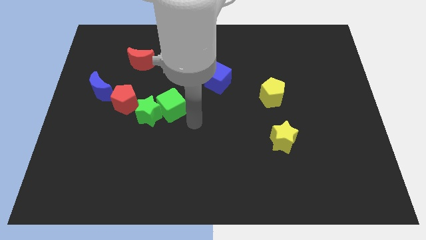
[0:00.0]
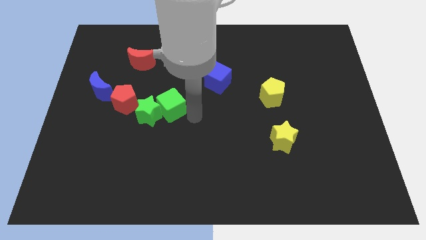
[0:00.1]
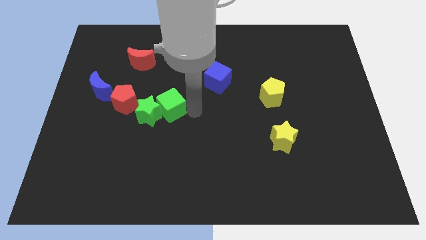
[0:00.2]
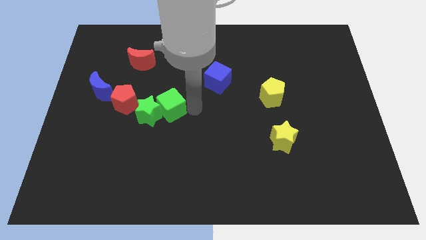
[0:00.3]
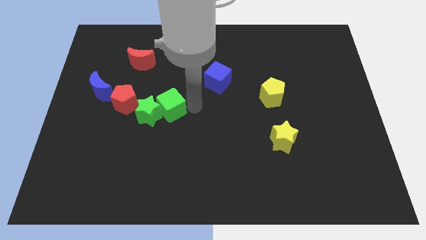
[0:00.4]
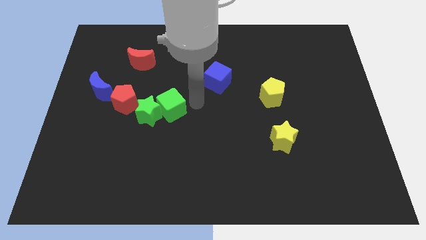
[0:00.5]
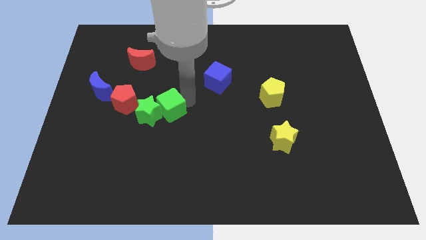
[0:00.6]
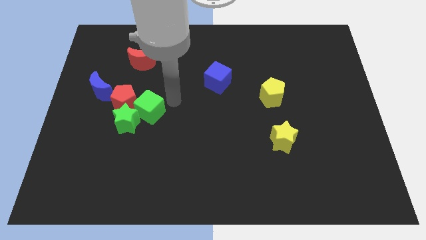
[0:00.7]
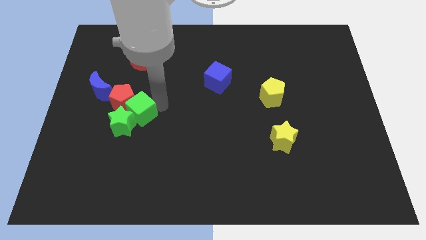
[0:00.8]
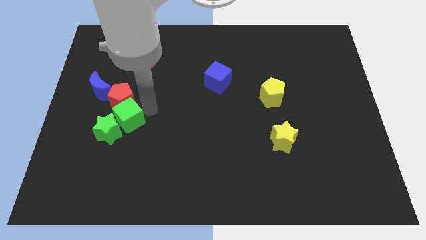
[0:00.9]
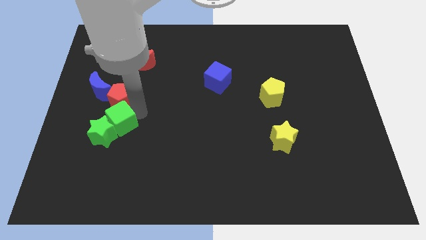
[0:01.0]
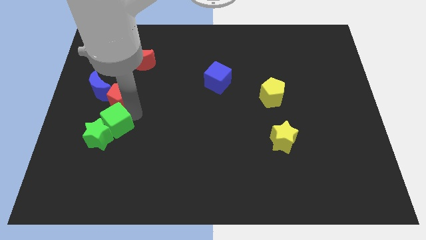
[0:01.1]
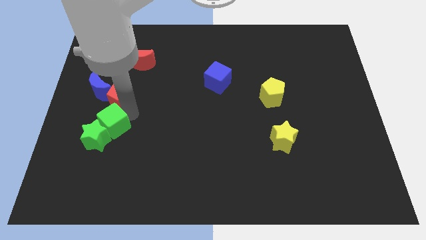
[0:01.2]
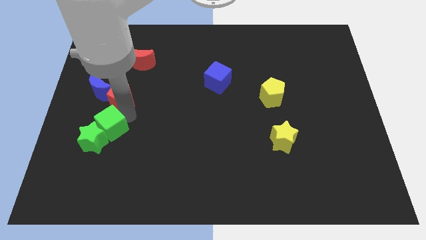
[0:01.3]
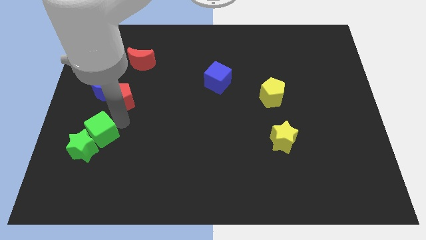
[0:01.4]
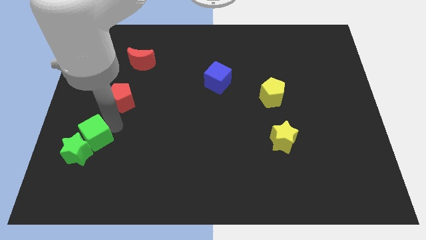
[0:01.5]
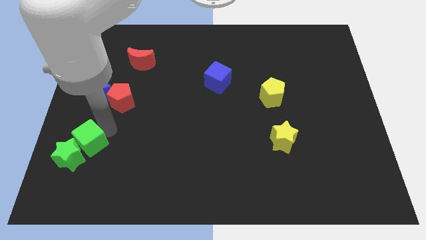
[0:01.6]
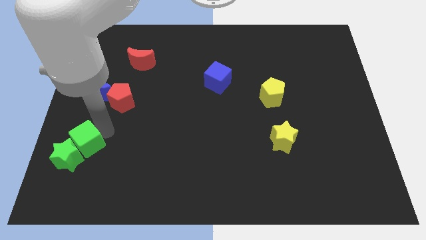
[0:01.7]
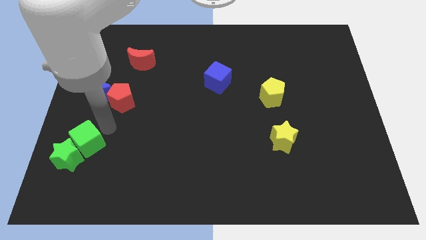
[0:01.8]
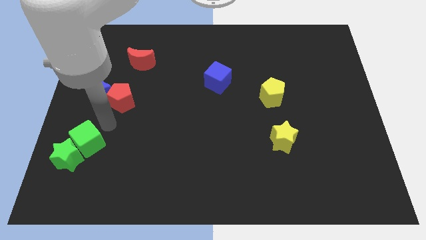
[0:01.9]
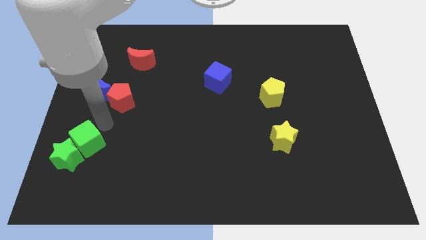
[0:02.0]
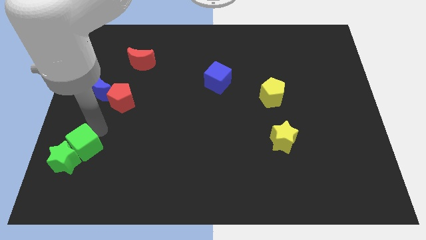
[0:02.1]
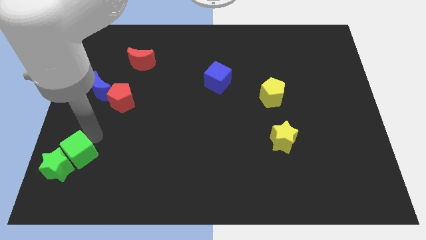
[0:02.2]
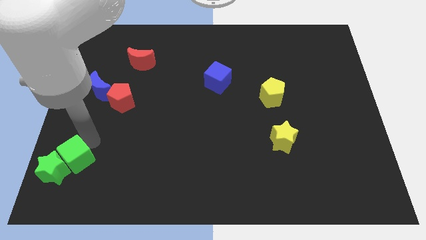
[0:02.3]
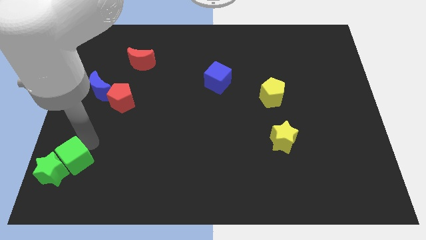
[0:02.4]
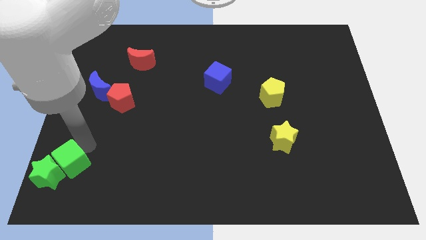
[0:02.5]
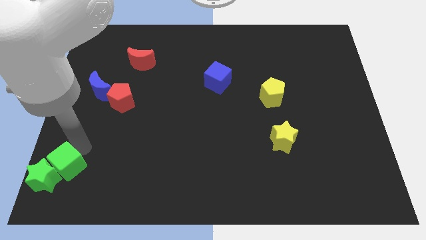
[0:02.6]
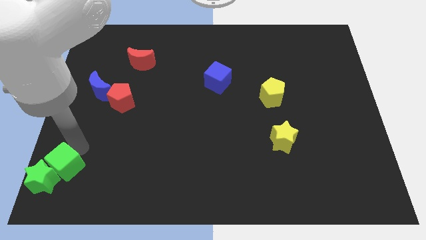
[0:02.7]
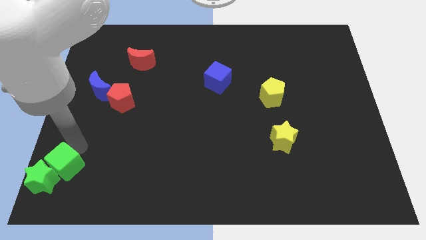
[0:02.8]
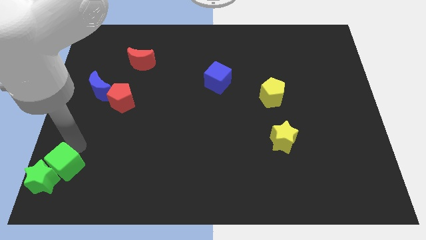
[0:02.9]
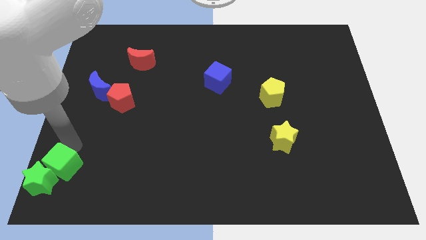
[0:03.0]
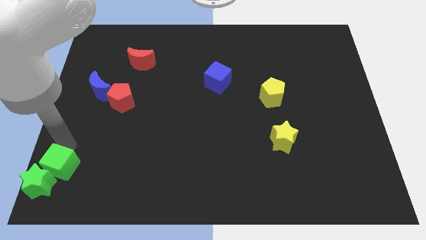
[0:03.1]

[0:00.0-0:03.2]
push the green blocks towards the left side of the board

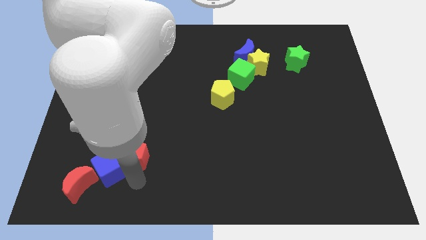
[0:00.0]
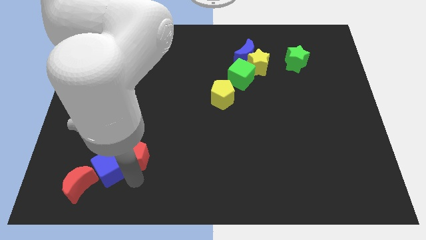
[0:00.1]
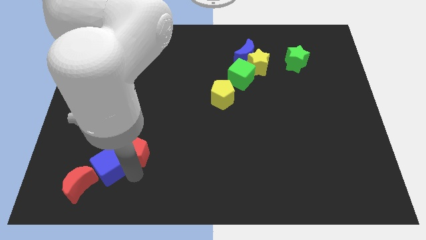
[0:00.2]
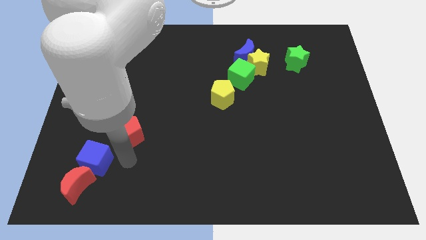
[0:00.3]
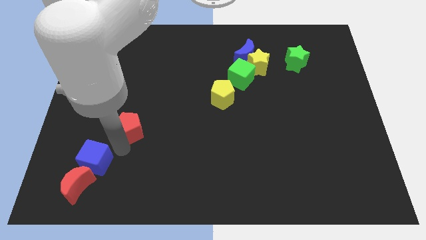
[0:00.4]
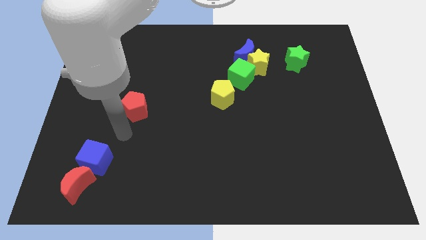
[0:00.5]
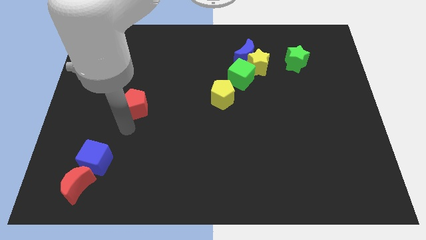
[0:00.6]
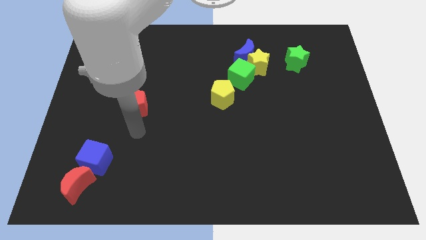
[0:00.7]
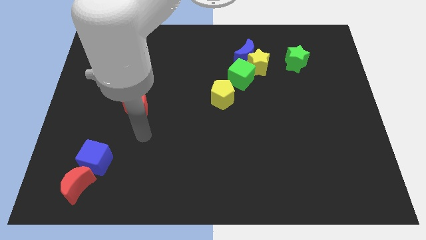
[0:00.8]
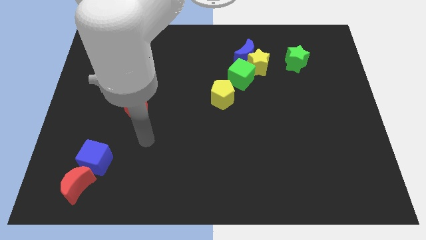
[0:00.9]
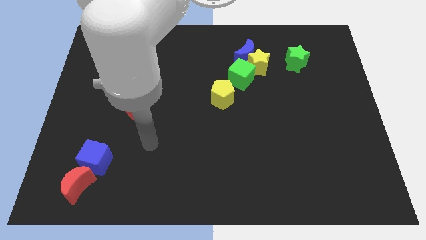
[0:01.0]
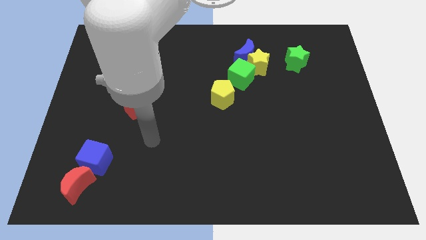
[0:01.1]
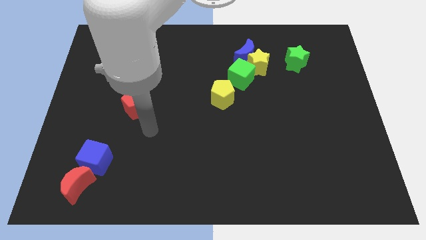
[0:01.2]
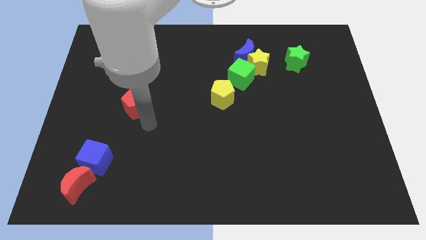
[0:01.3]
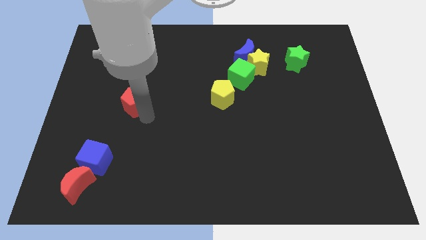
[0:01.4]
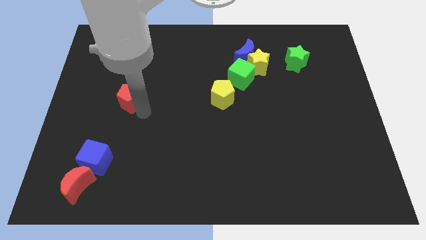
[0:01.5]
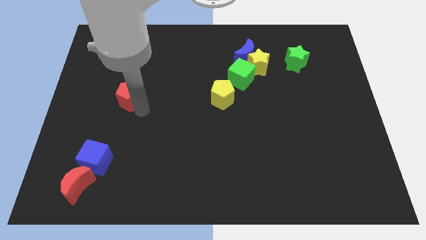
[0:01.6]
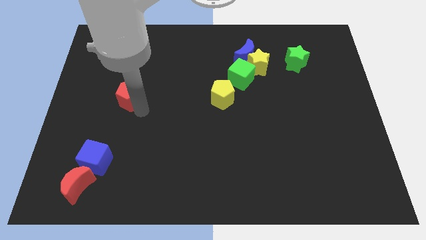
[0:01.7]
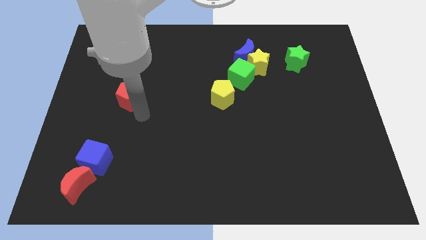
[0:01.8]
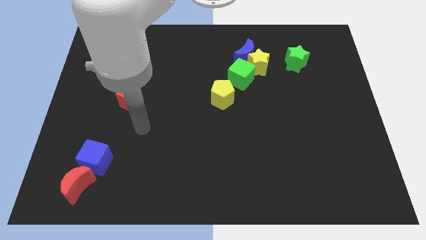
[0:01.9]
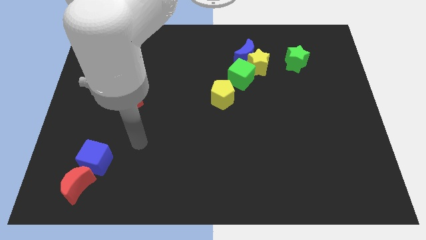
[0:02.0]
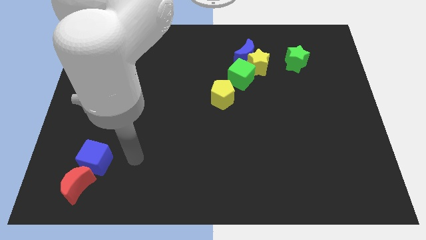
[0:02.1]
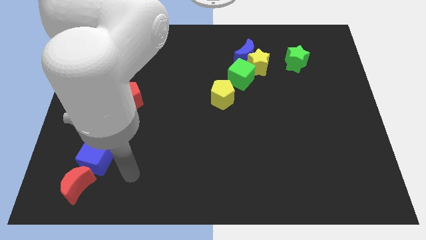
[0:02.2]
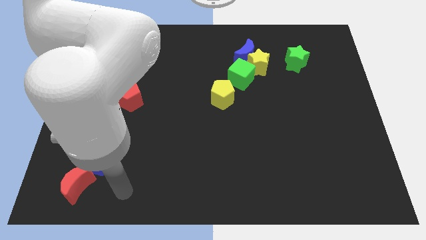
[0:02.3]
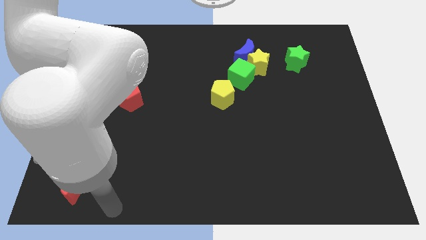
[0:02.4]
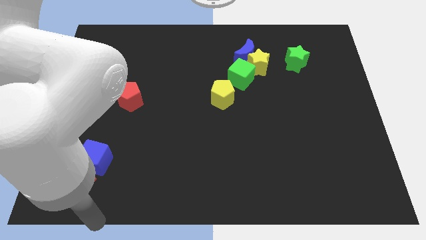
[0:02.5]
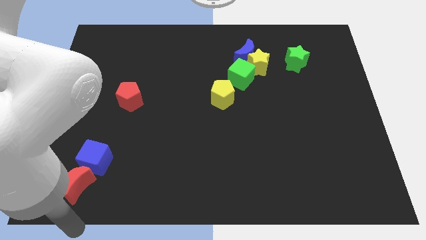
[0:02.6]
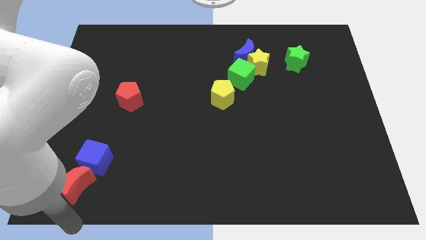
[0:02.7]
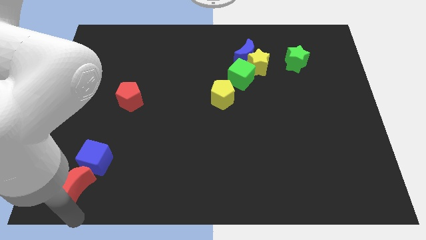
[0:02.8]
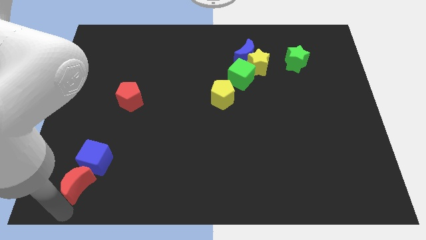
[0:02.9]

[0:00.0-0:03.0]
move the red pentagon up slightly

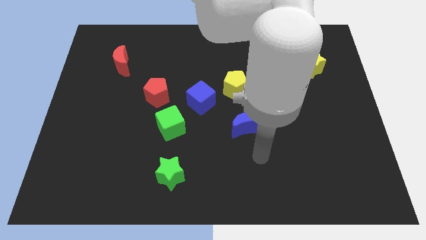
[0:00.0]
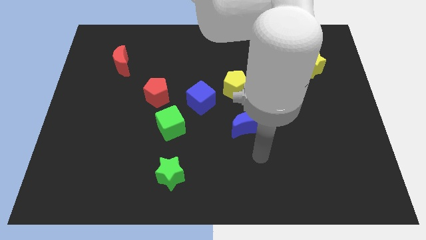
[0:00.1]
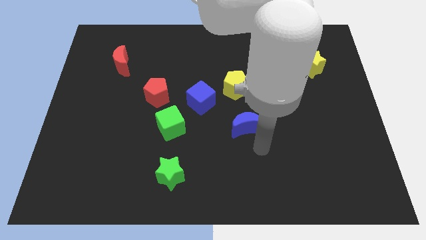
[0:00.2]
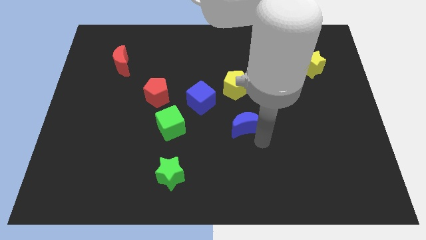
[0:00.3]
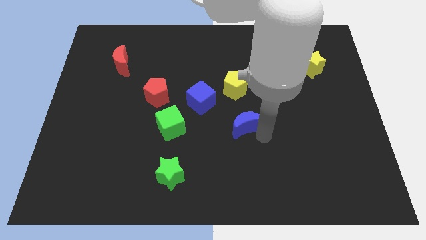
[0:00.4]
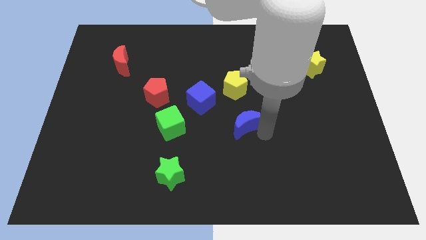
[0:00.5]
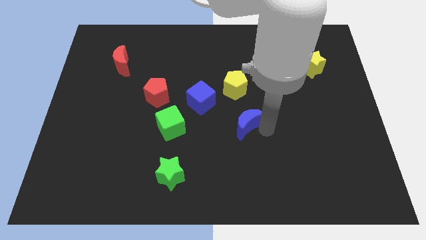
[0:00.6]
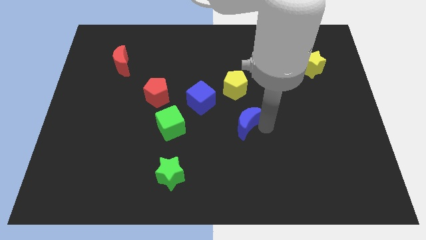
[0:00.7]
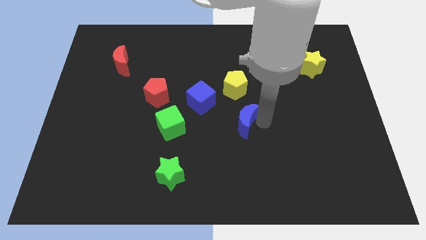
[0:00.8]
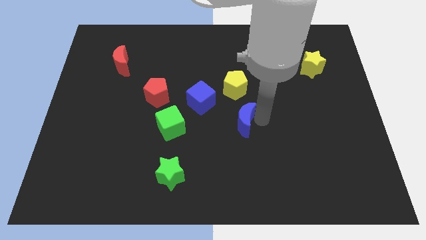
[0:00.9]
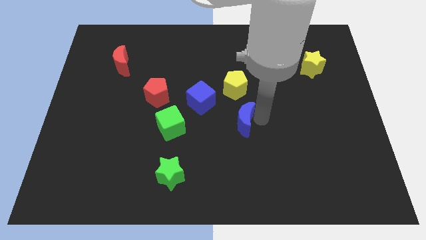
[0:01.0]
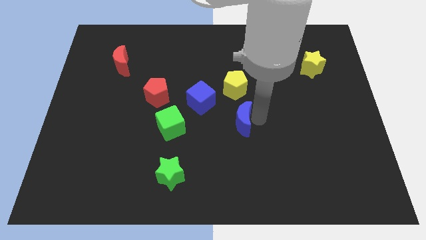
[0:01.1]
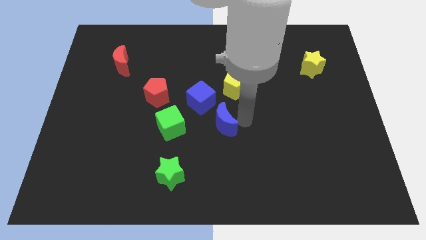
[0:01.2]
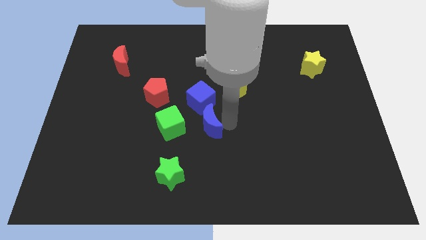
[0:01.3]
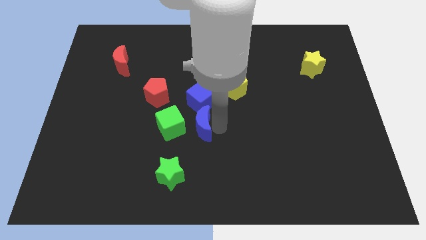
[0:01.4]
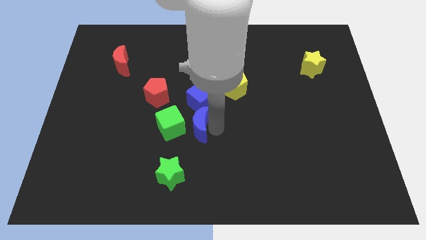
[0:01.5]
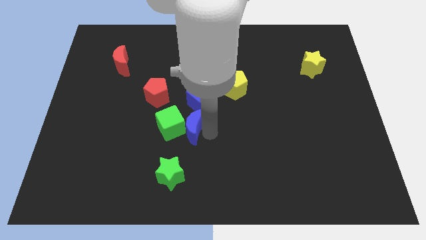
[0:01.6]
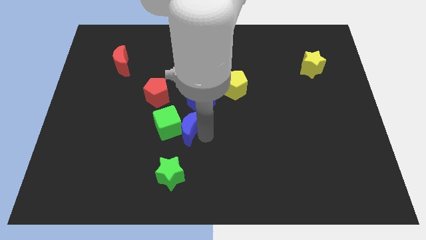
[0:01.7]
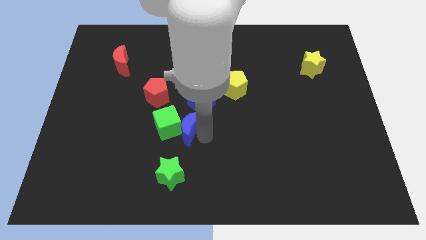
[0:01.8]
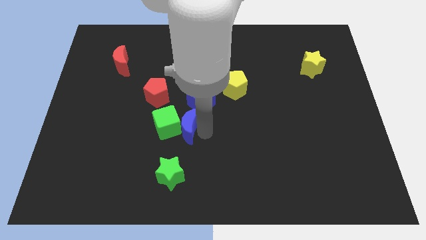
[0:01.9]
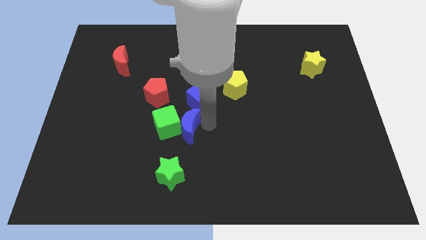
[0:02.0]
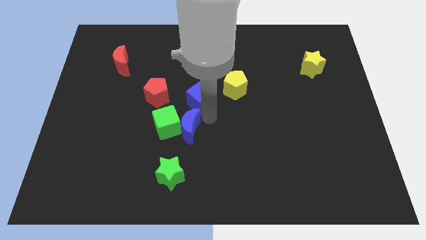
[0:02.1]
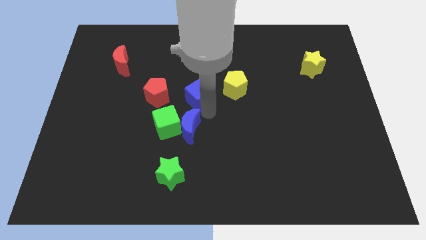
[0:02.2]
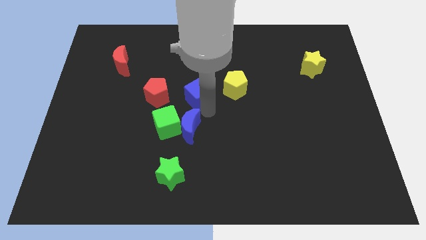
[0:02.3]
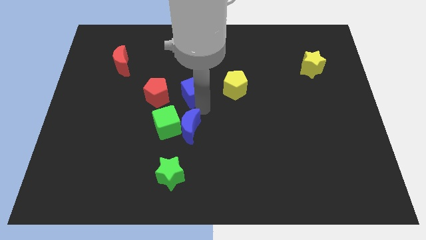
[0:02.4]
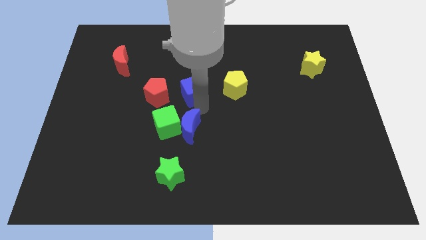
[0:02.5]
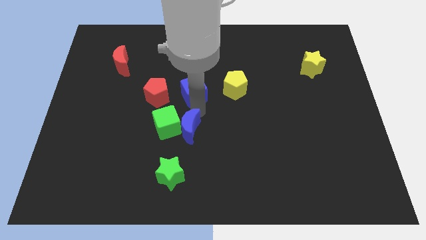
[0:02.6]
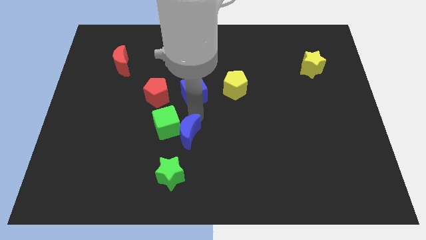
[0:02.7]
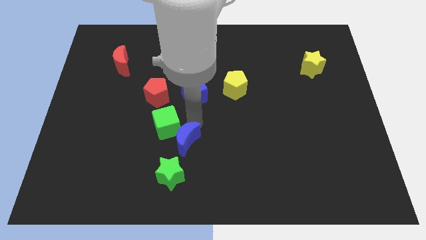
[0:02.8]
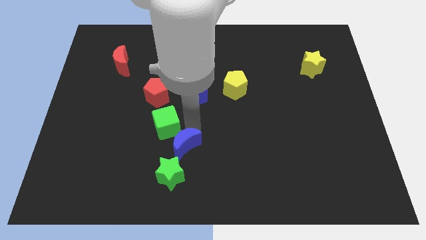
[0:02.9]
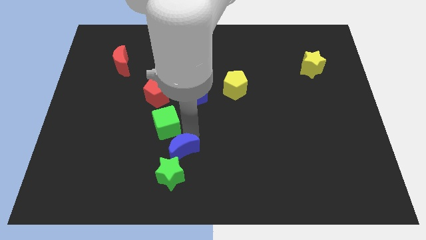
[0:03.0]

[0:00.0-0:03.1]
push blue moon in to green cube
